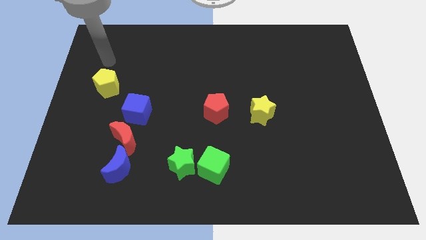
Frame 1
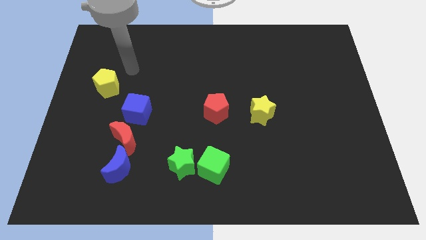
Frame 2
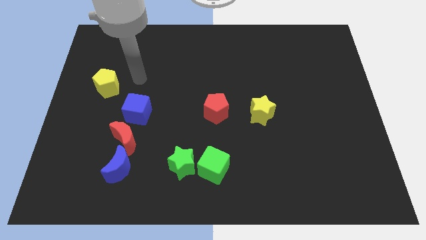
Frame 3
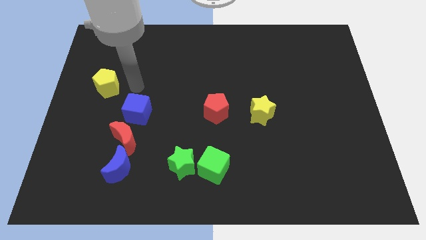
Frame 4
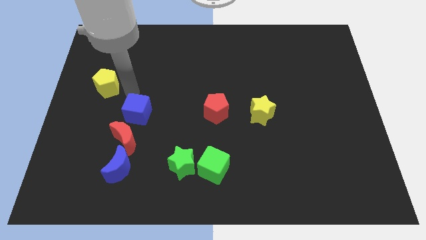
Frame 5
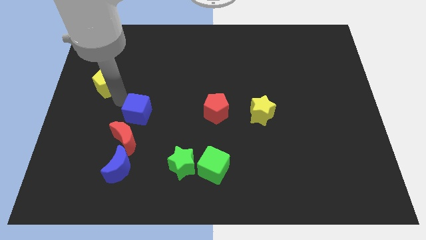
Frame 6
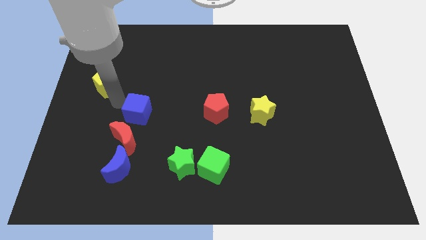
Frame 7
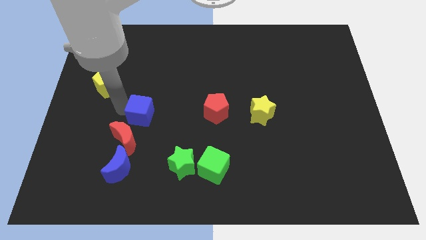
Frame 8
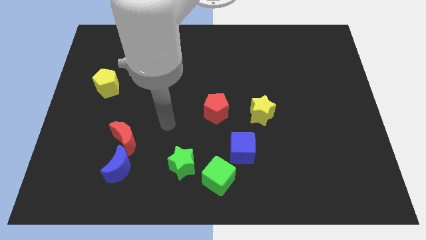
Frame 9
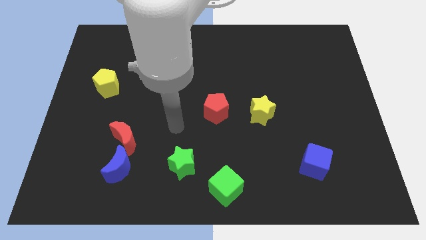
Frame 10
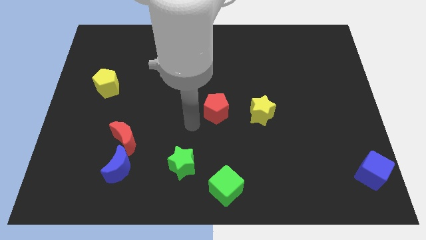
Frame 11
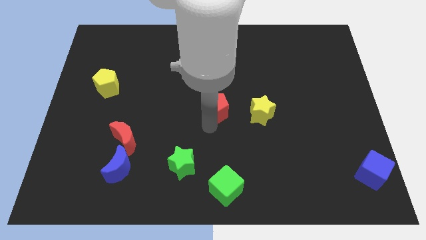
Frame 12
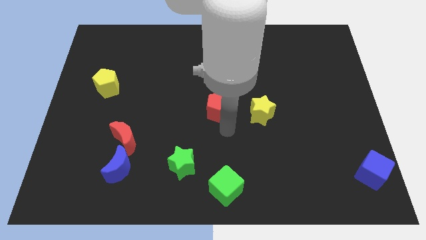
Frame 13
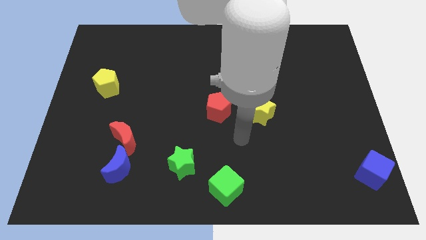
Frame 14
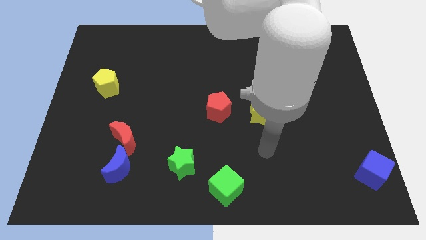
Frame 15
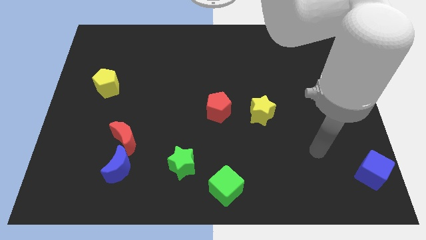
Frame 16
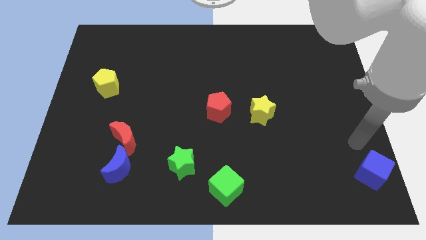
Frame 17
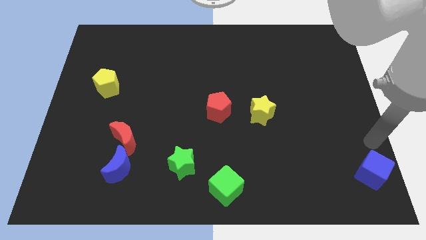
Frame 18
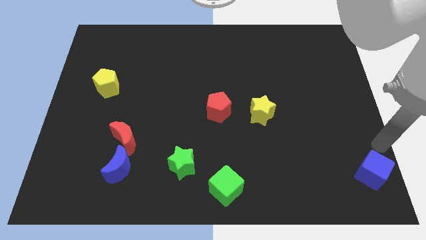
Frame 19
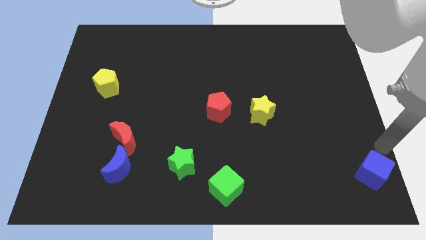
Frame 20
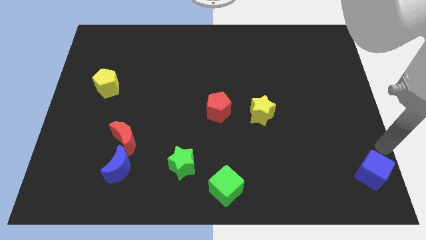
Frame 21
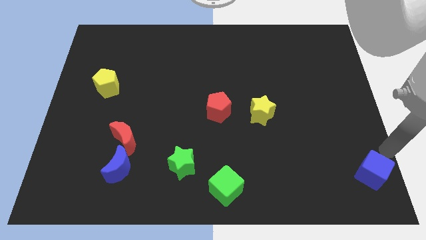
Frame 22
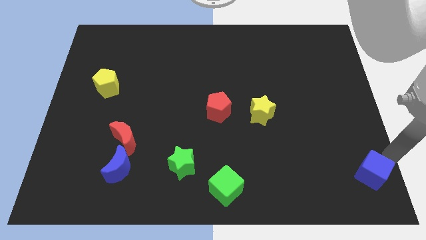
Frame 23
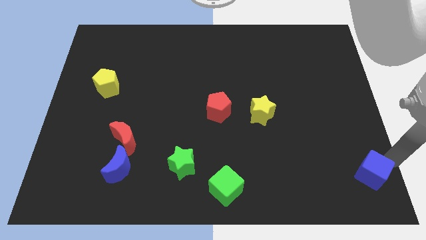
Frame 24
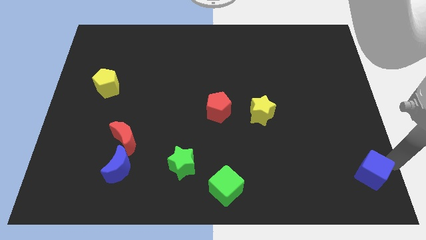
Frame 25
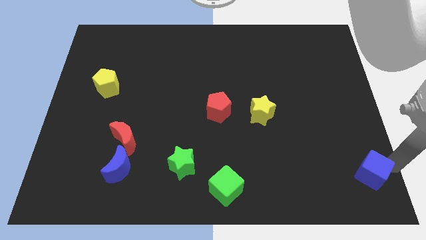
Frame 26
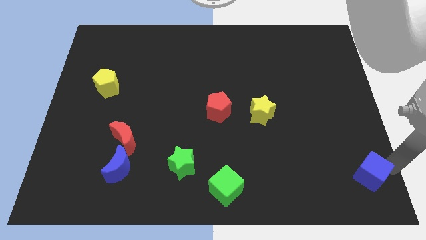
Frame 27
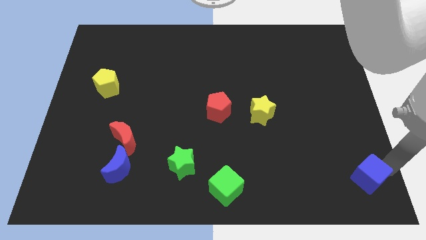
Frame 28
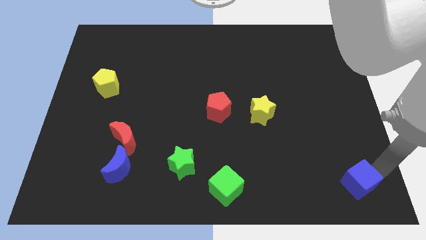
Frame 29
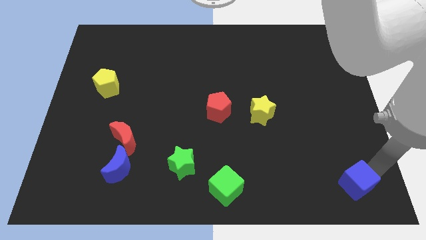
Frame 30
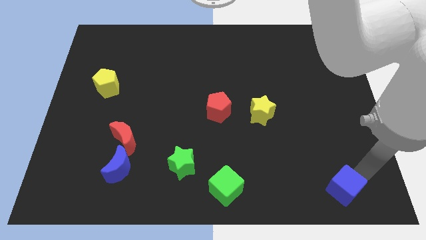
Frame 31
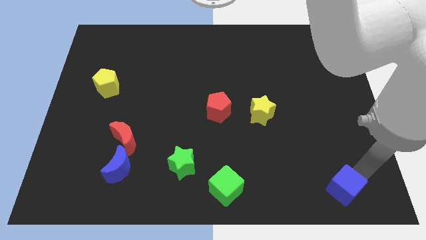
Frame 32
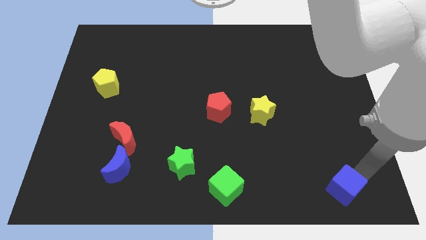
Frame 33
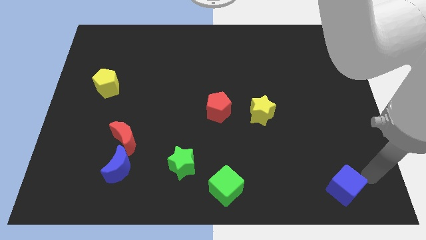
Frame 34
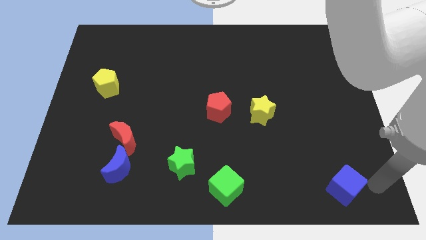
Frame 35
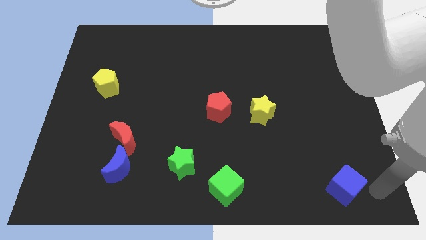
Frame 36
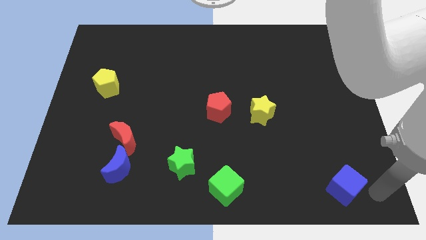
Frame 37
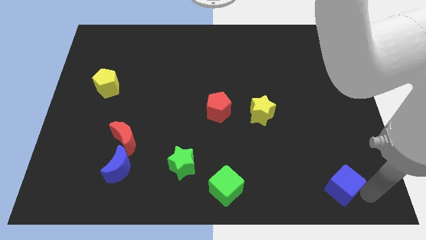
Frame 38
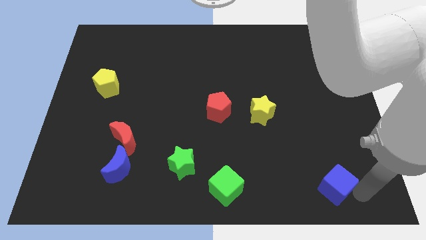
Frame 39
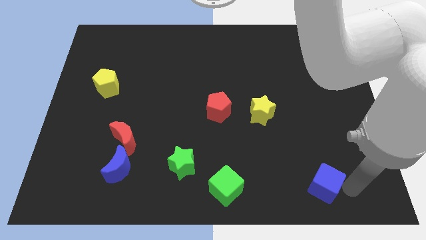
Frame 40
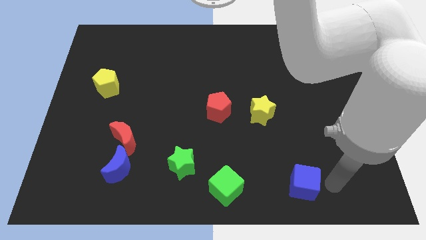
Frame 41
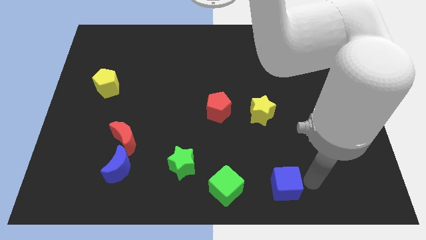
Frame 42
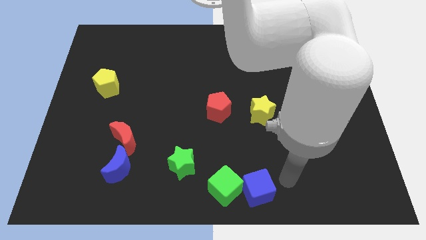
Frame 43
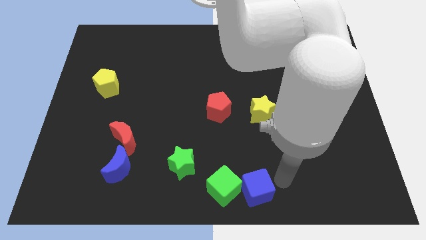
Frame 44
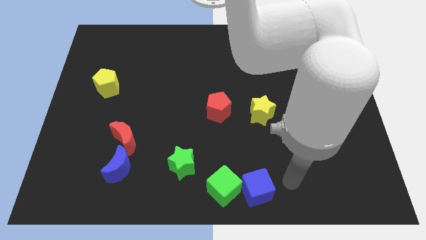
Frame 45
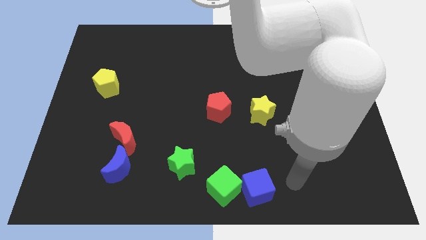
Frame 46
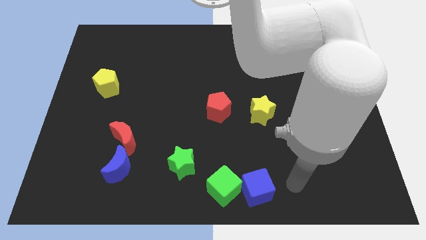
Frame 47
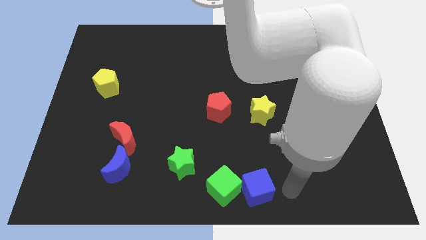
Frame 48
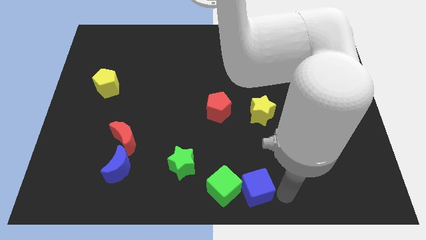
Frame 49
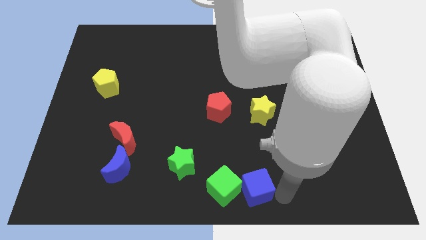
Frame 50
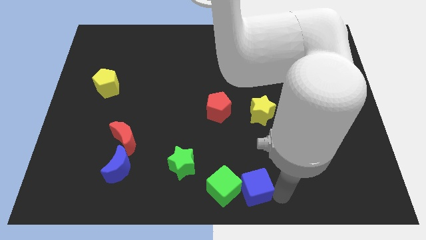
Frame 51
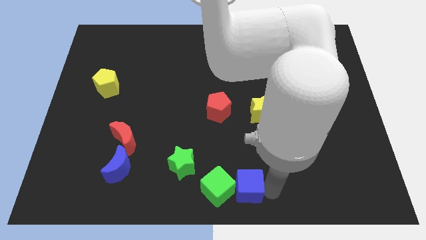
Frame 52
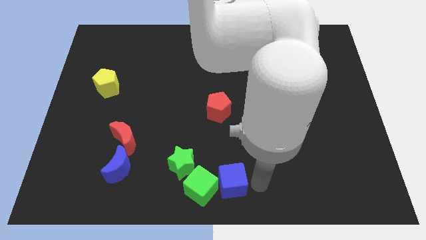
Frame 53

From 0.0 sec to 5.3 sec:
slide the blue cube towards the green cube

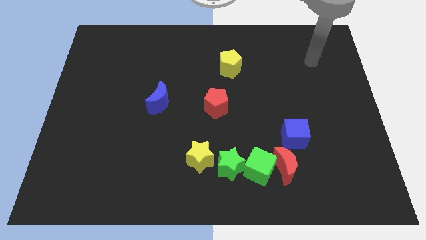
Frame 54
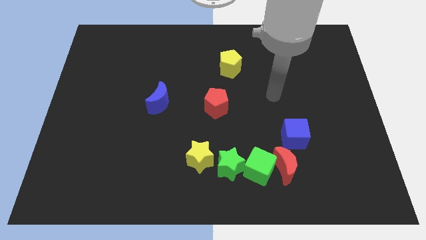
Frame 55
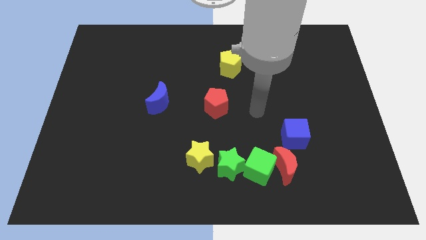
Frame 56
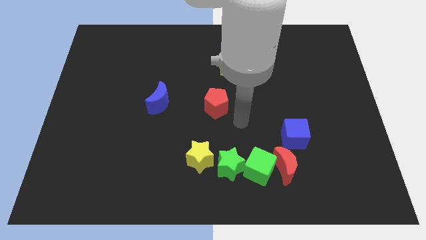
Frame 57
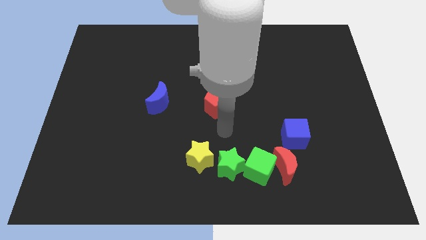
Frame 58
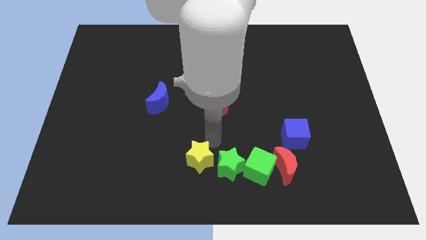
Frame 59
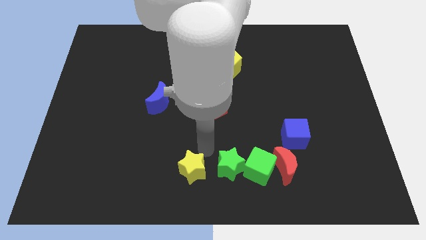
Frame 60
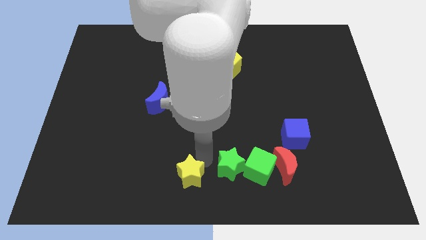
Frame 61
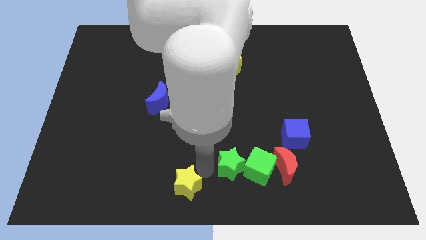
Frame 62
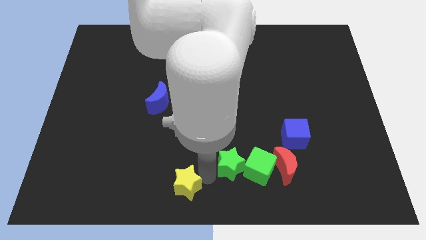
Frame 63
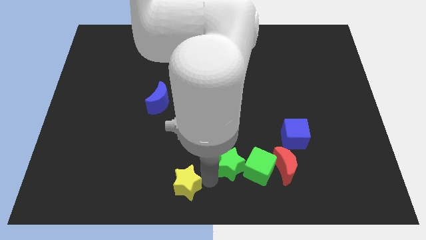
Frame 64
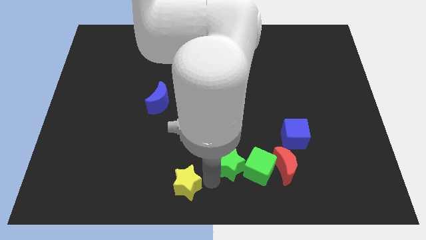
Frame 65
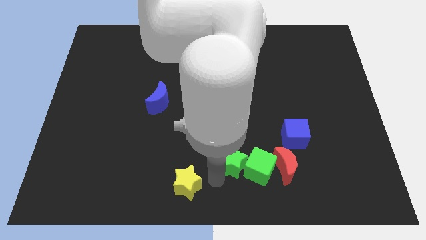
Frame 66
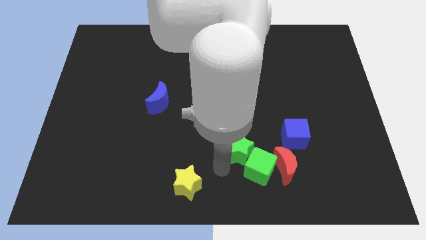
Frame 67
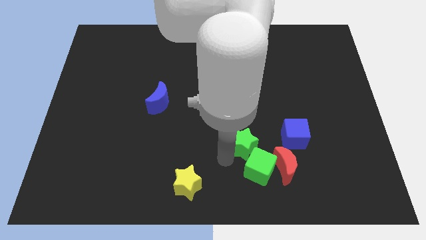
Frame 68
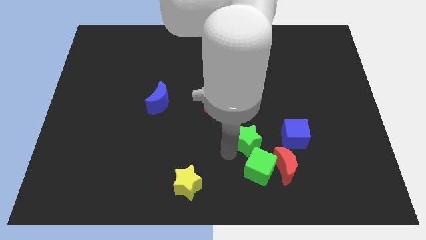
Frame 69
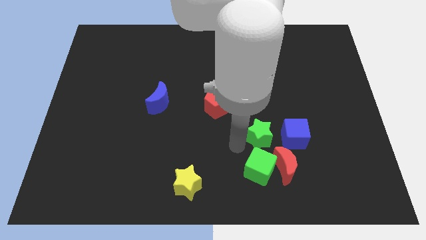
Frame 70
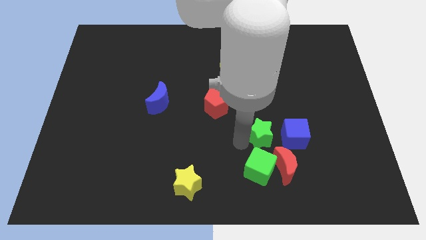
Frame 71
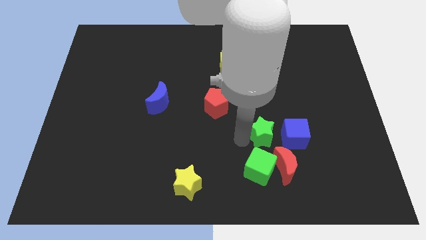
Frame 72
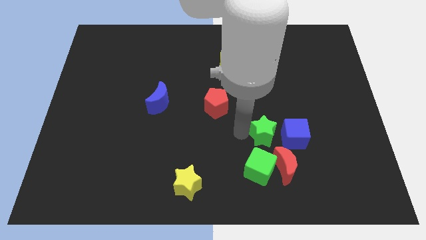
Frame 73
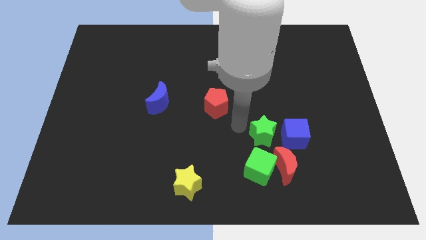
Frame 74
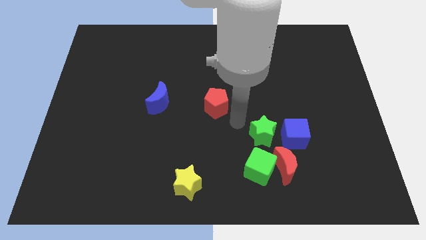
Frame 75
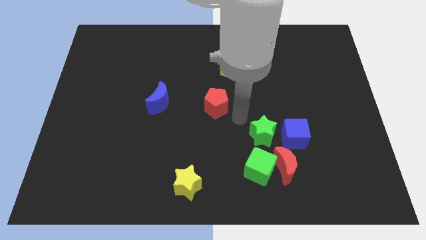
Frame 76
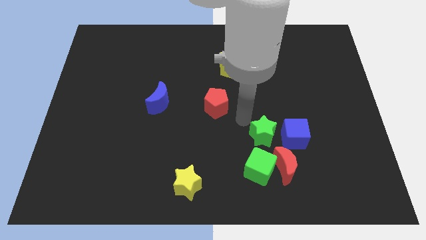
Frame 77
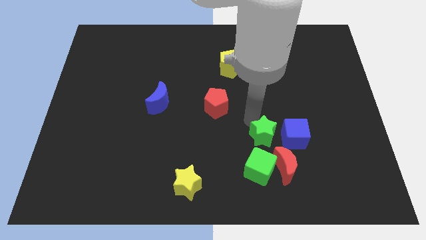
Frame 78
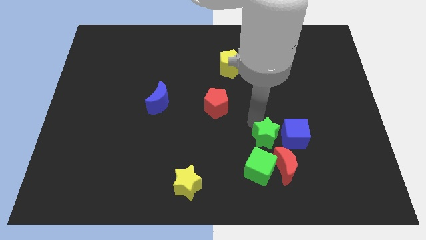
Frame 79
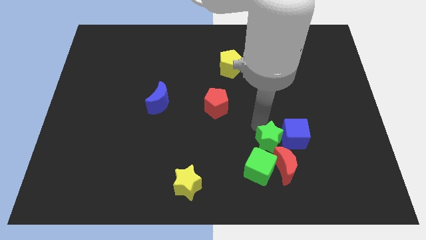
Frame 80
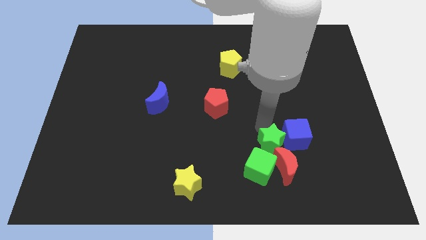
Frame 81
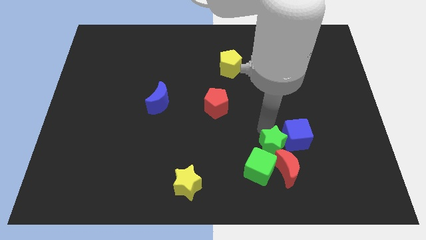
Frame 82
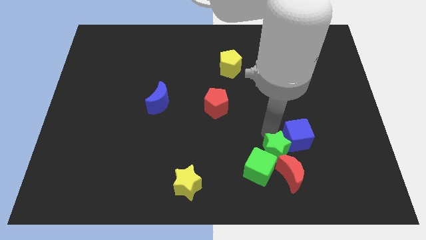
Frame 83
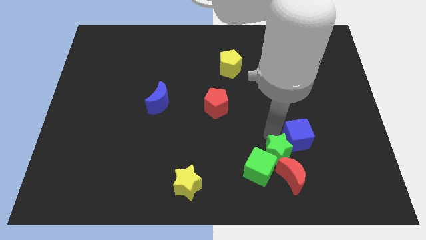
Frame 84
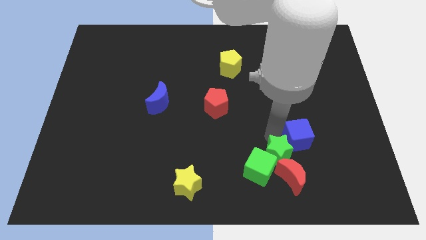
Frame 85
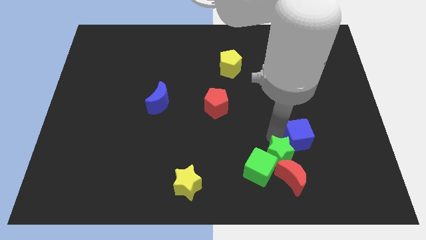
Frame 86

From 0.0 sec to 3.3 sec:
move the green star next to the red moon
